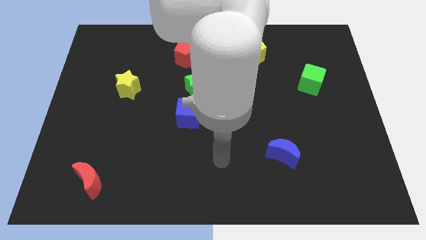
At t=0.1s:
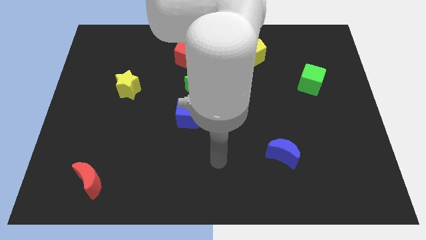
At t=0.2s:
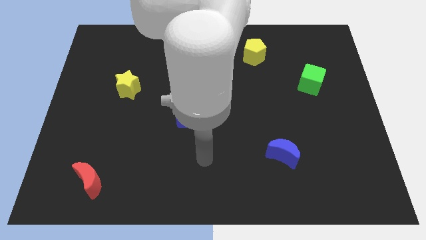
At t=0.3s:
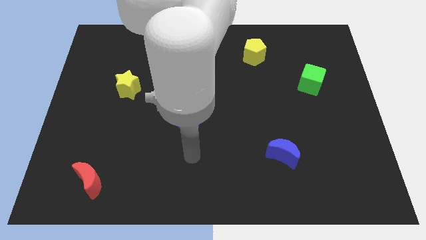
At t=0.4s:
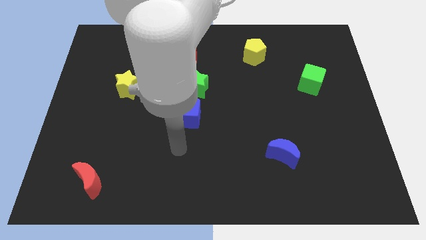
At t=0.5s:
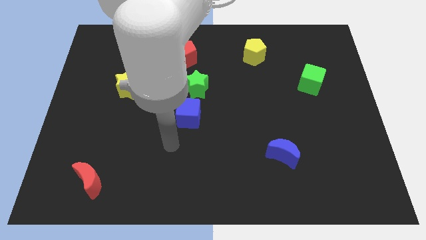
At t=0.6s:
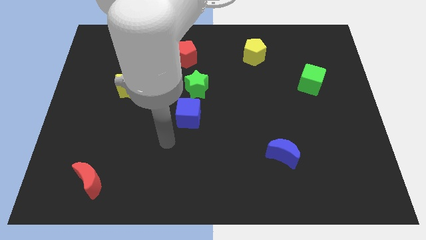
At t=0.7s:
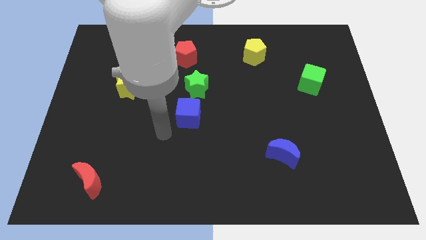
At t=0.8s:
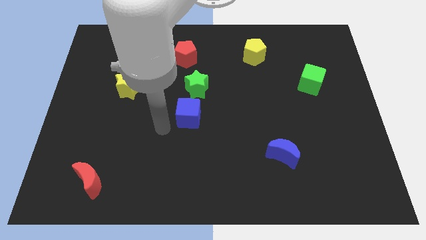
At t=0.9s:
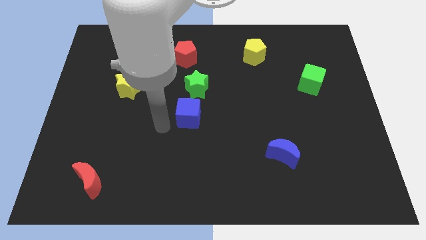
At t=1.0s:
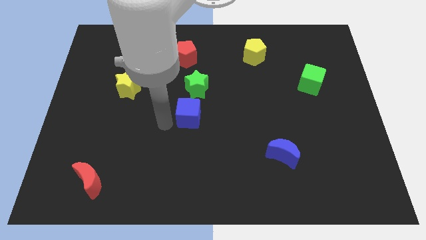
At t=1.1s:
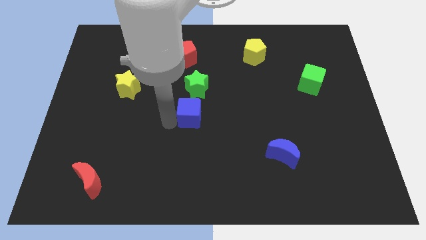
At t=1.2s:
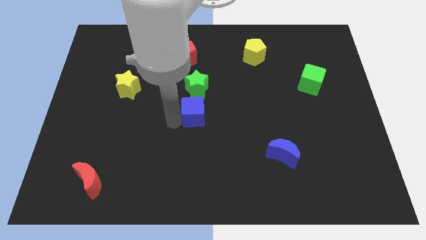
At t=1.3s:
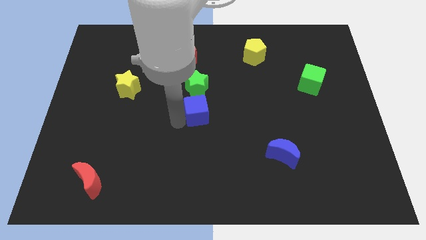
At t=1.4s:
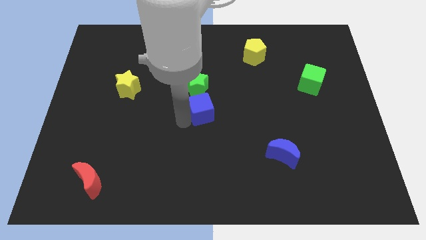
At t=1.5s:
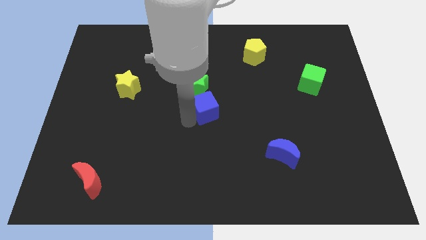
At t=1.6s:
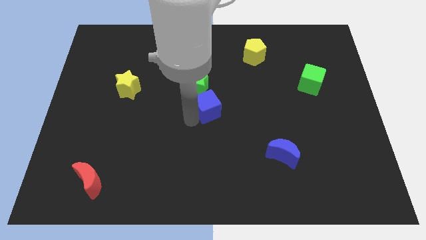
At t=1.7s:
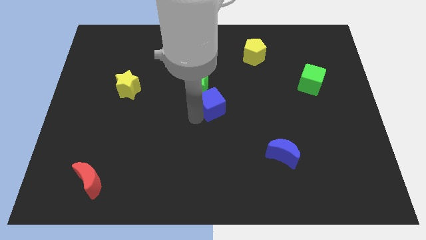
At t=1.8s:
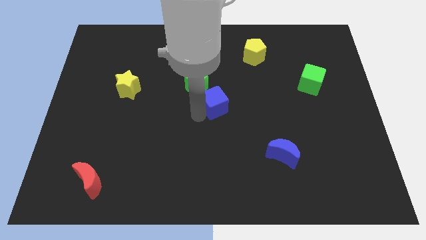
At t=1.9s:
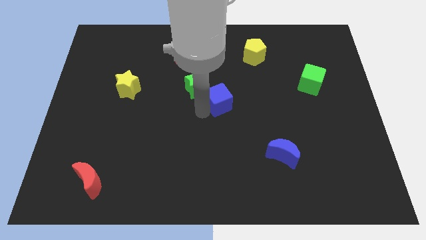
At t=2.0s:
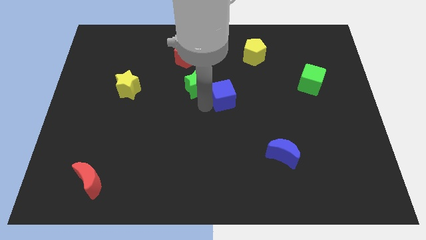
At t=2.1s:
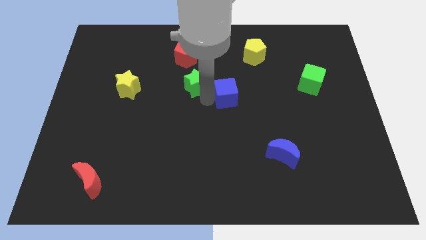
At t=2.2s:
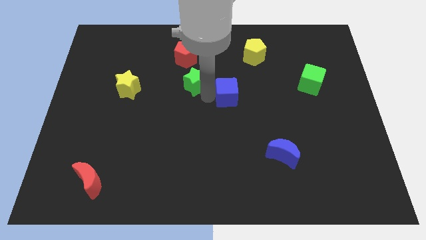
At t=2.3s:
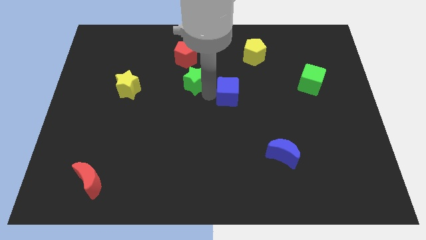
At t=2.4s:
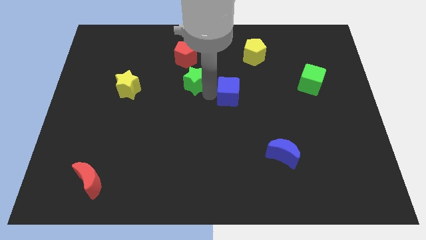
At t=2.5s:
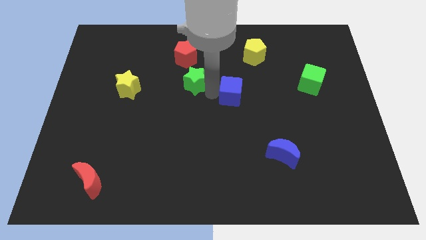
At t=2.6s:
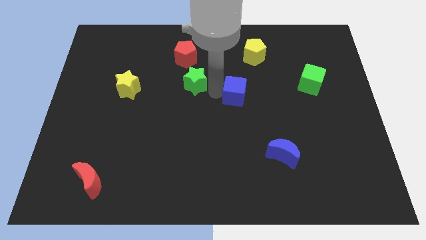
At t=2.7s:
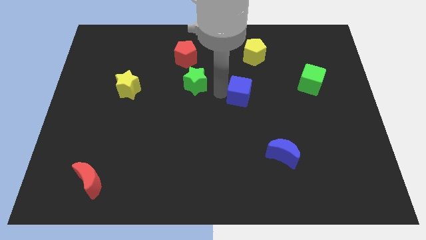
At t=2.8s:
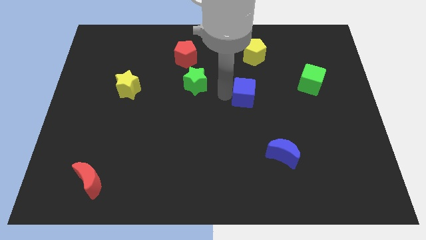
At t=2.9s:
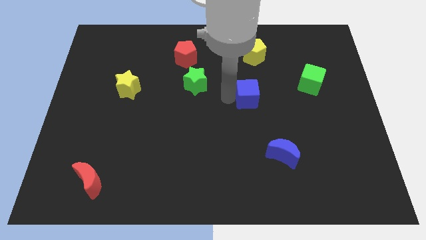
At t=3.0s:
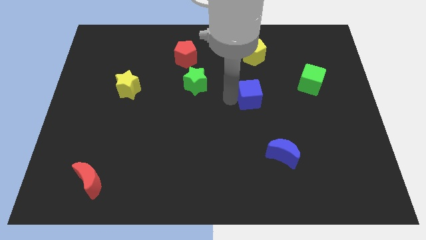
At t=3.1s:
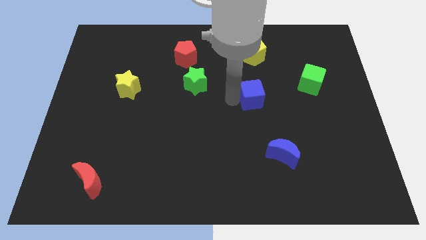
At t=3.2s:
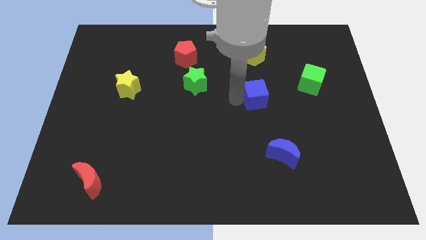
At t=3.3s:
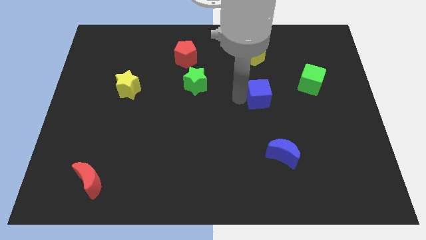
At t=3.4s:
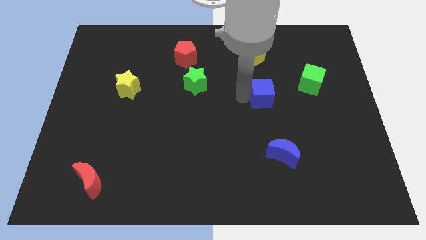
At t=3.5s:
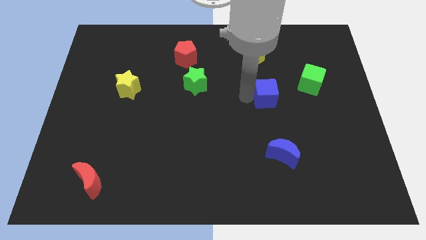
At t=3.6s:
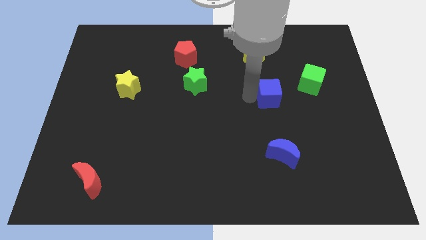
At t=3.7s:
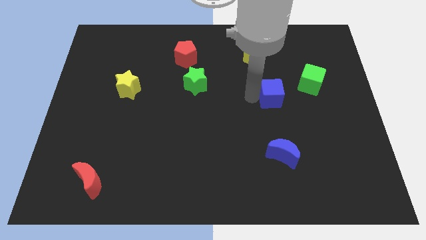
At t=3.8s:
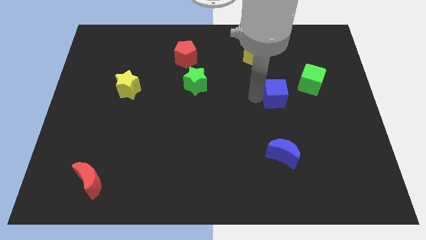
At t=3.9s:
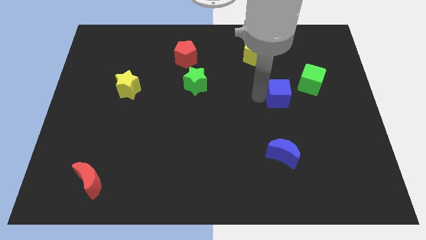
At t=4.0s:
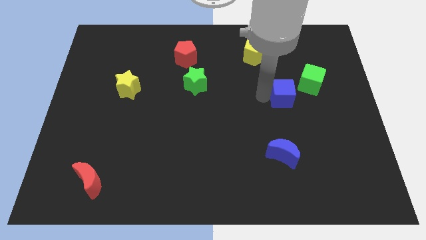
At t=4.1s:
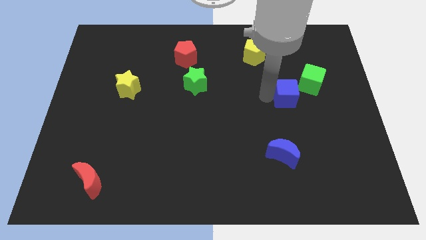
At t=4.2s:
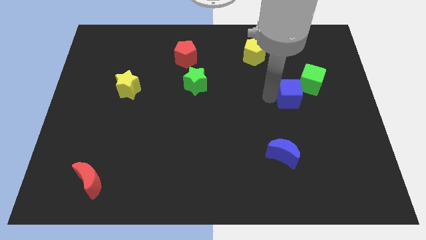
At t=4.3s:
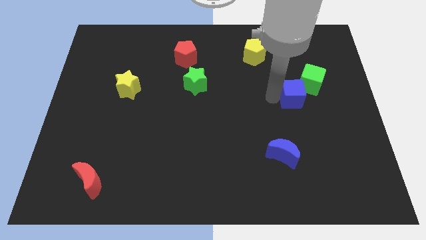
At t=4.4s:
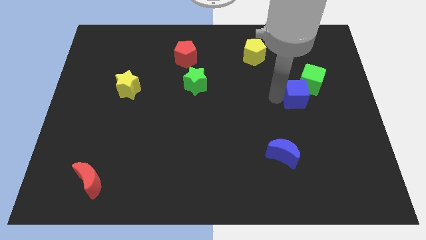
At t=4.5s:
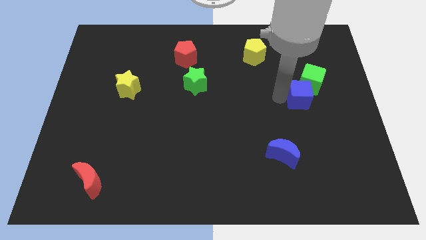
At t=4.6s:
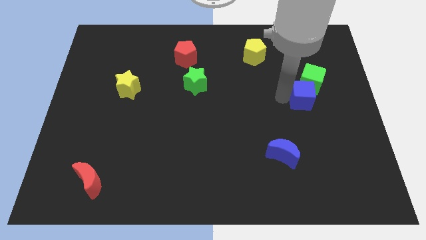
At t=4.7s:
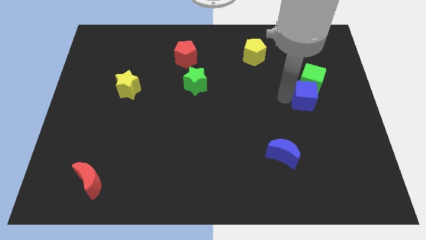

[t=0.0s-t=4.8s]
put the blue cube next to the green cube

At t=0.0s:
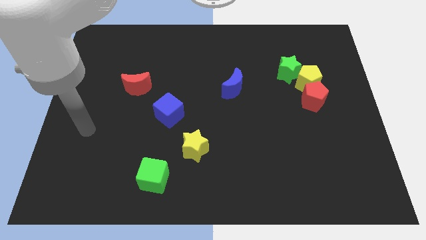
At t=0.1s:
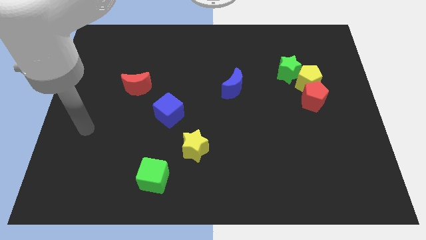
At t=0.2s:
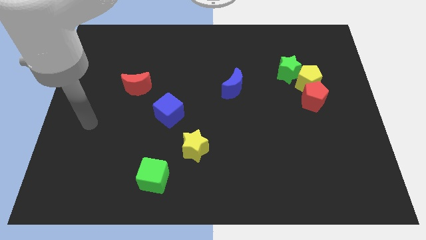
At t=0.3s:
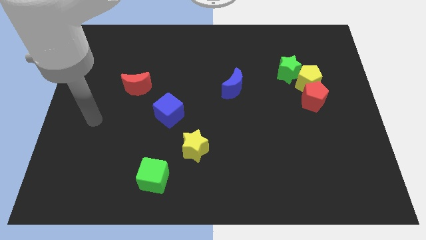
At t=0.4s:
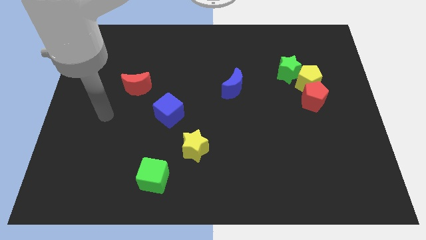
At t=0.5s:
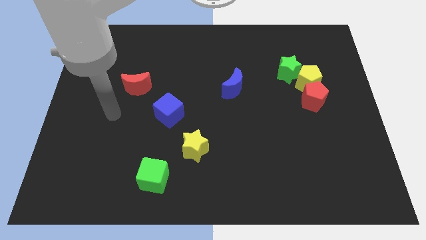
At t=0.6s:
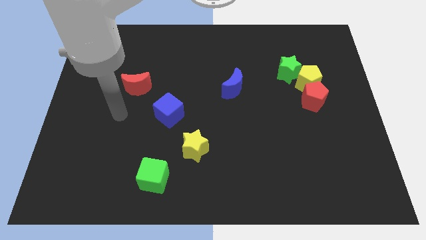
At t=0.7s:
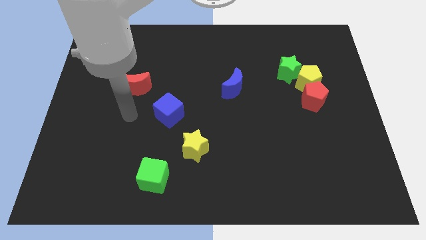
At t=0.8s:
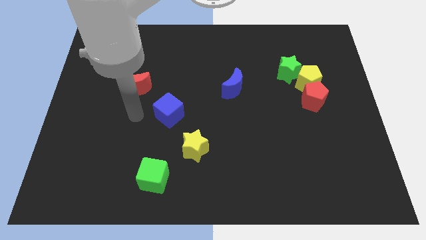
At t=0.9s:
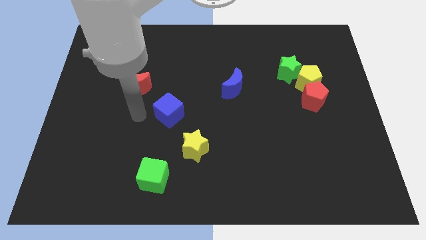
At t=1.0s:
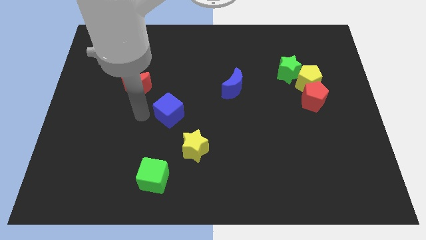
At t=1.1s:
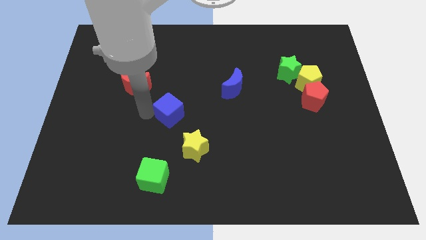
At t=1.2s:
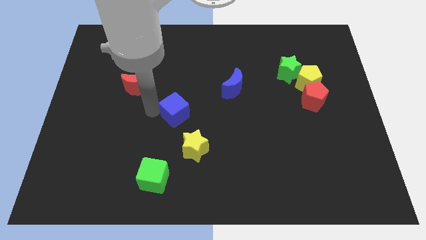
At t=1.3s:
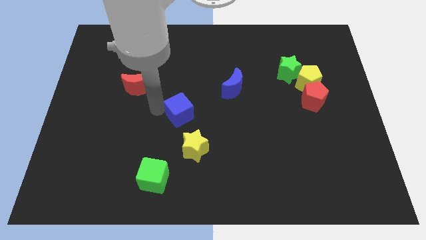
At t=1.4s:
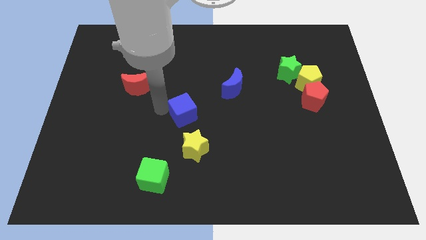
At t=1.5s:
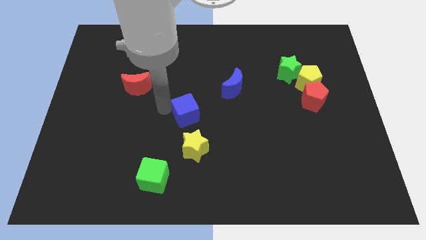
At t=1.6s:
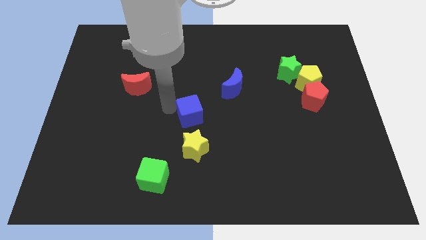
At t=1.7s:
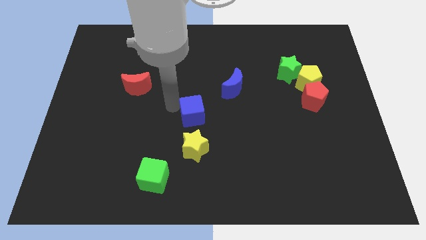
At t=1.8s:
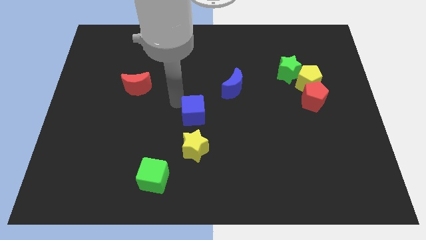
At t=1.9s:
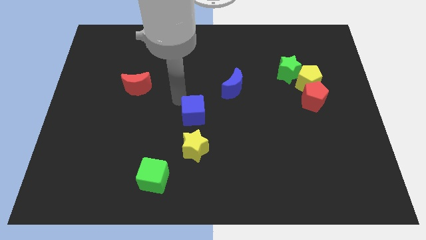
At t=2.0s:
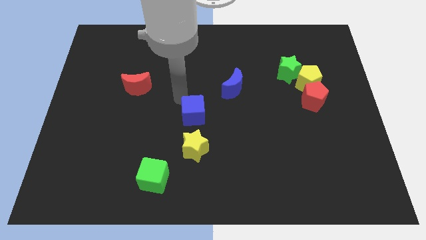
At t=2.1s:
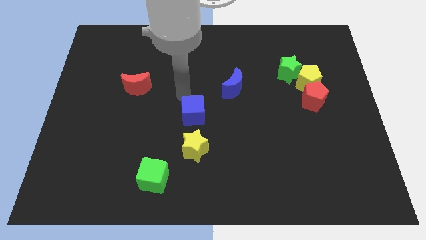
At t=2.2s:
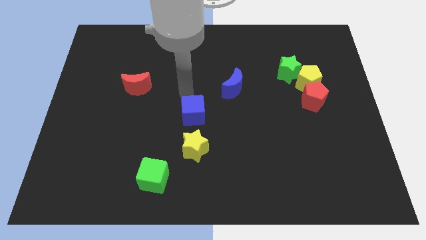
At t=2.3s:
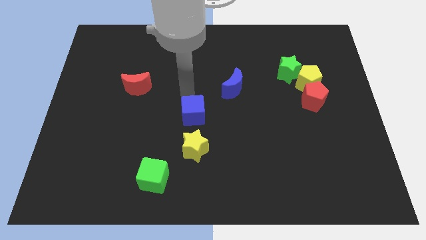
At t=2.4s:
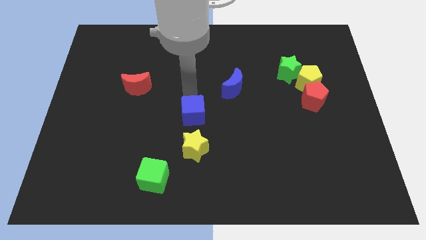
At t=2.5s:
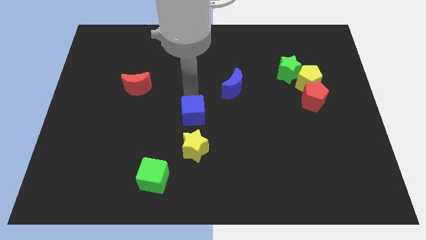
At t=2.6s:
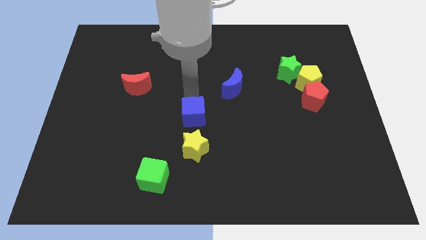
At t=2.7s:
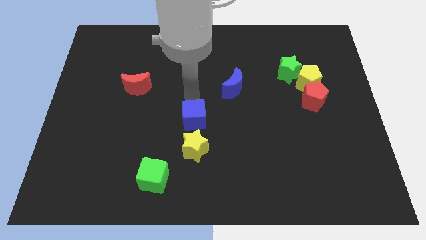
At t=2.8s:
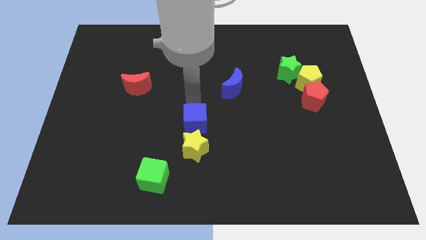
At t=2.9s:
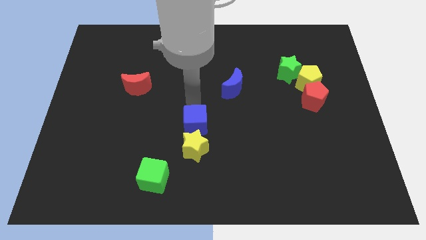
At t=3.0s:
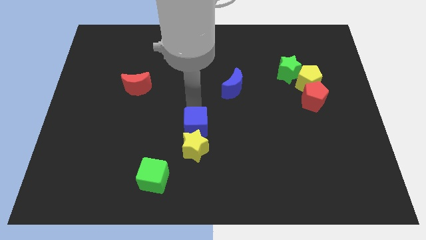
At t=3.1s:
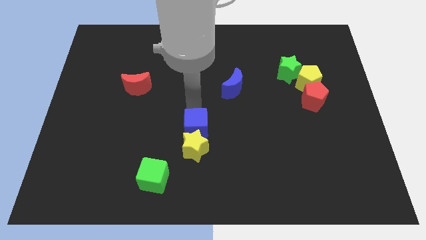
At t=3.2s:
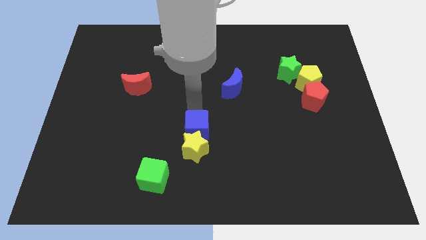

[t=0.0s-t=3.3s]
slide the blue cube to the yellow star
